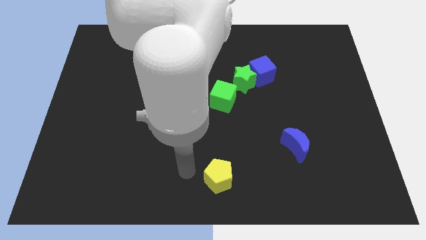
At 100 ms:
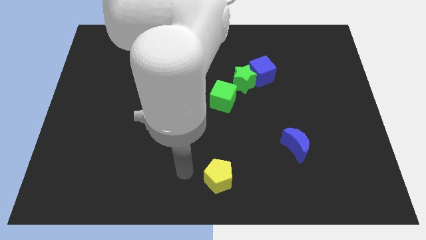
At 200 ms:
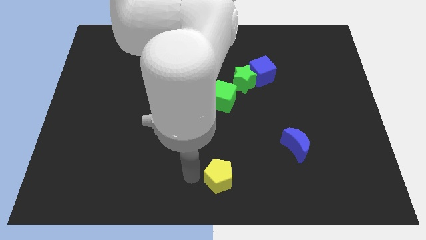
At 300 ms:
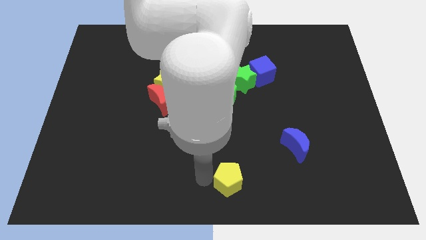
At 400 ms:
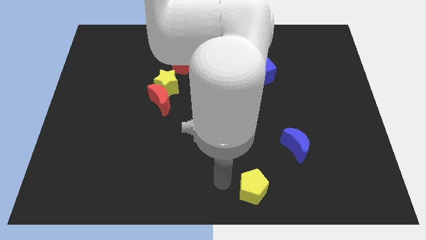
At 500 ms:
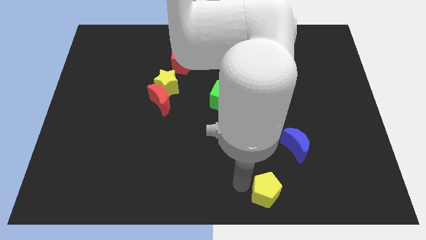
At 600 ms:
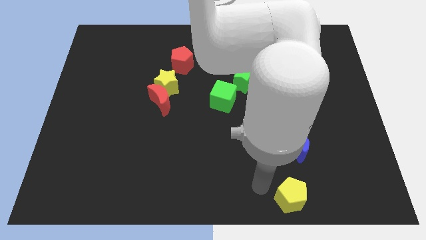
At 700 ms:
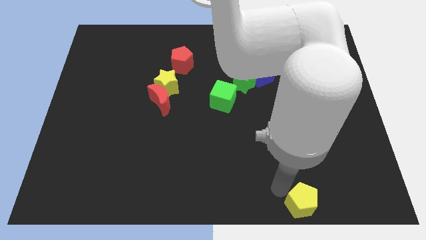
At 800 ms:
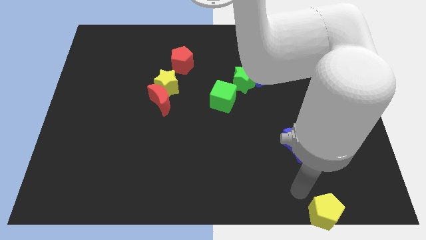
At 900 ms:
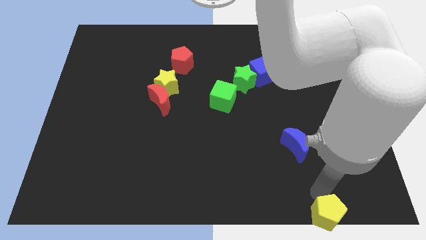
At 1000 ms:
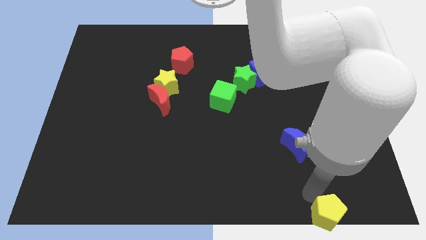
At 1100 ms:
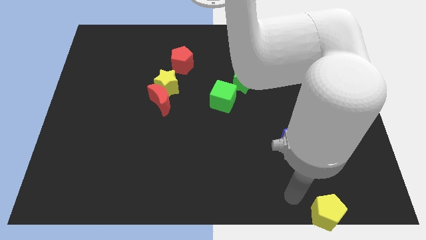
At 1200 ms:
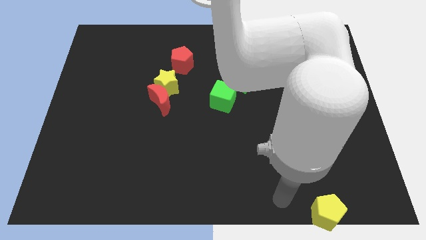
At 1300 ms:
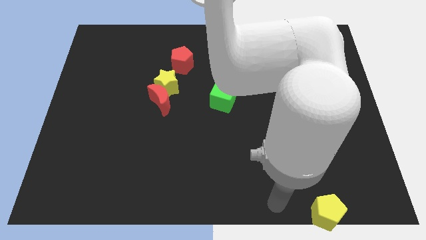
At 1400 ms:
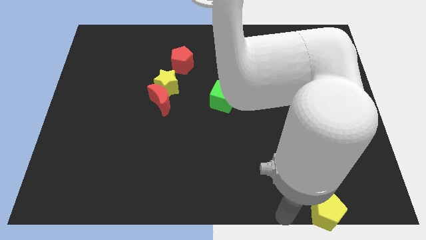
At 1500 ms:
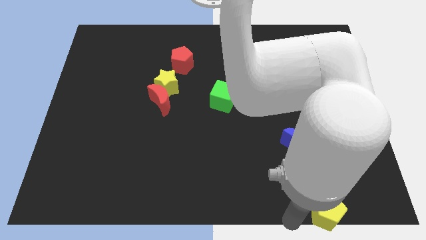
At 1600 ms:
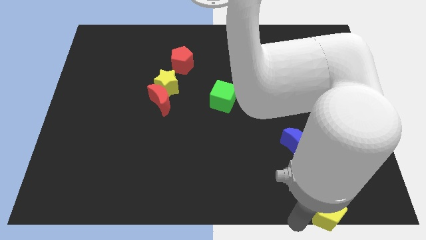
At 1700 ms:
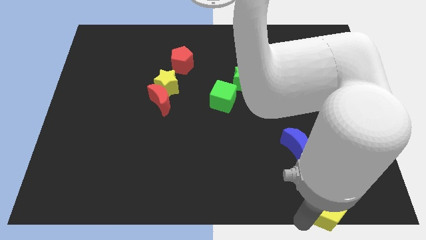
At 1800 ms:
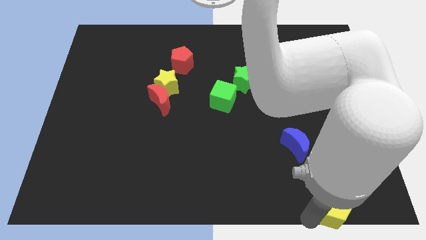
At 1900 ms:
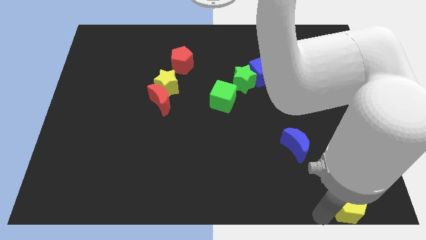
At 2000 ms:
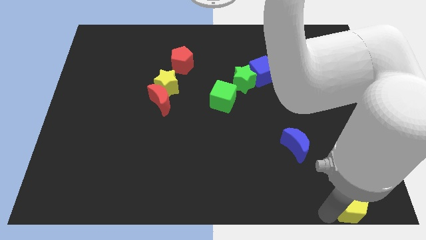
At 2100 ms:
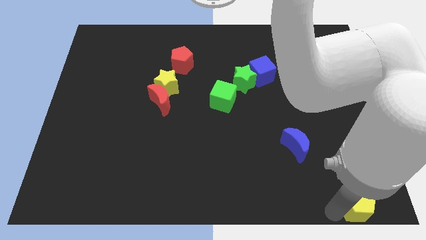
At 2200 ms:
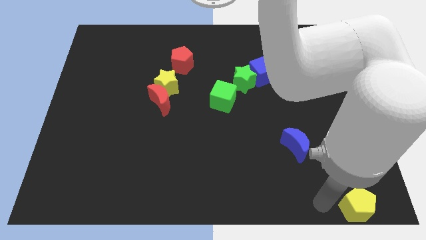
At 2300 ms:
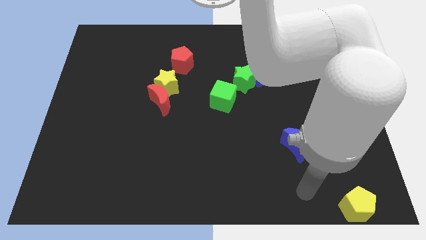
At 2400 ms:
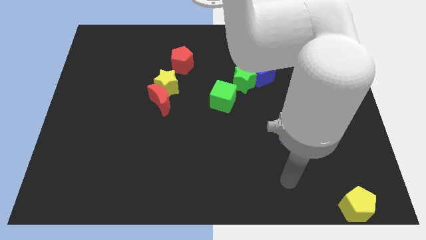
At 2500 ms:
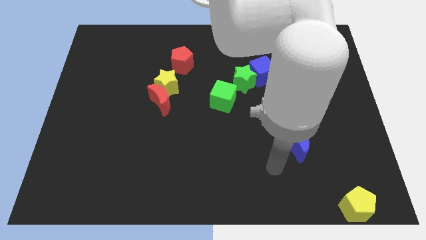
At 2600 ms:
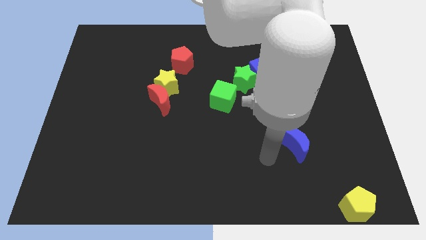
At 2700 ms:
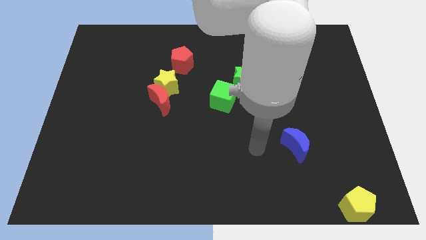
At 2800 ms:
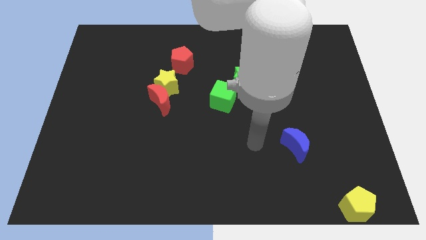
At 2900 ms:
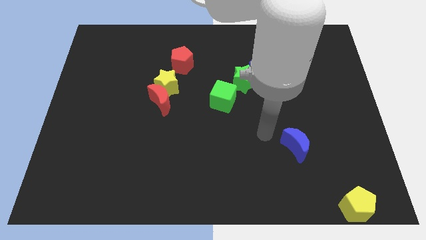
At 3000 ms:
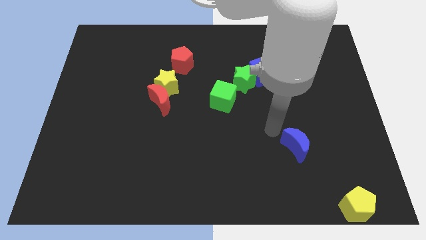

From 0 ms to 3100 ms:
move the yellow pentagon towards the bottom right corner

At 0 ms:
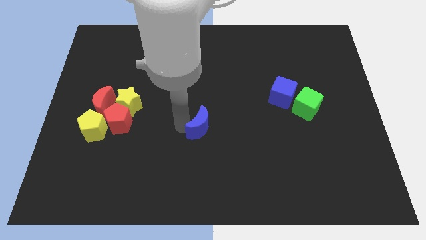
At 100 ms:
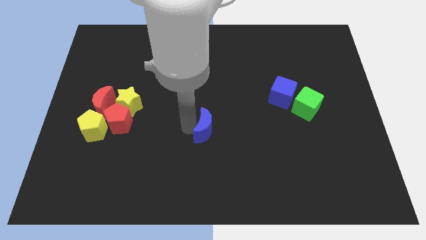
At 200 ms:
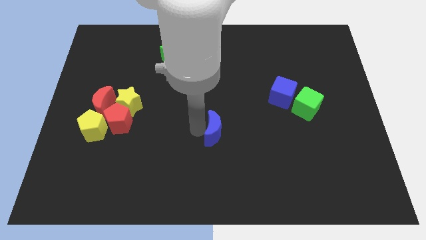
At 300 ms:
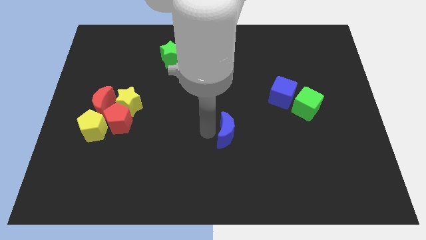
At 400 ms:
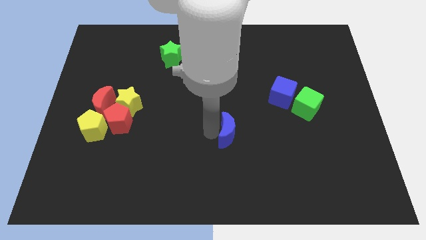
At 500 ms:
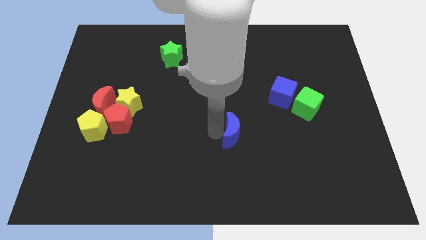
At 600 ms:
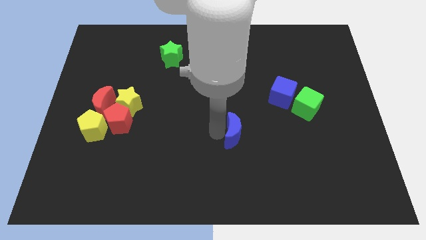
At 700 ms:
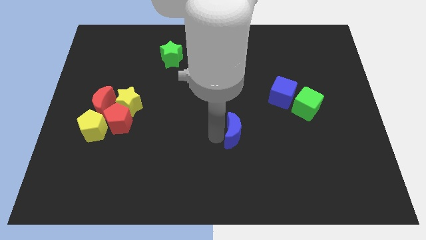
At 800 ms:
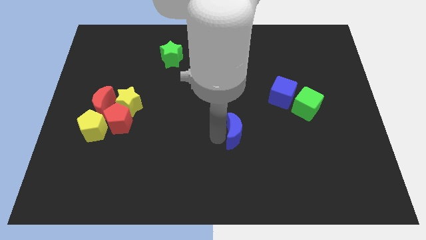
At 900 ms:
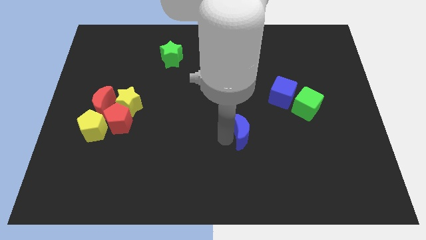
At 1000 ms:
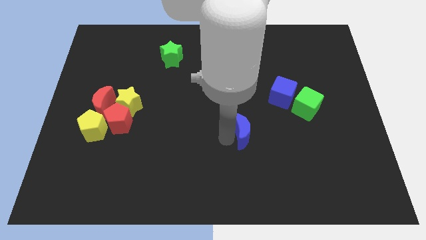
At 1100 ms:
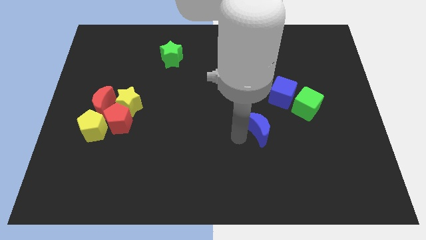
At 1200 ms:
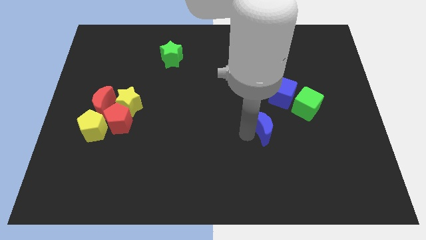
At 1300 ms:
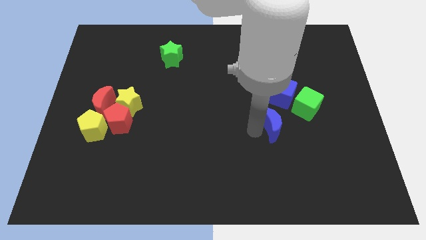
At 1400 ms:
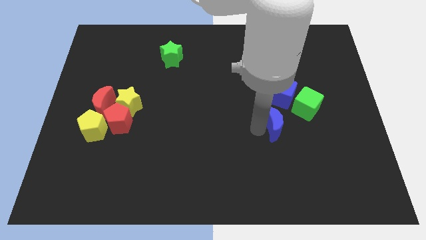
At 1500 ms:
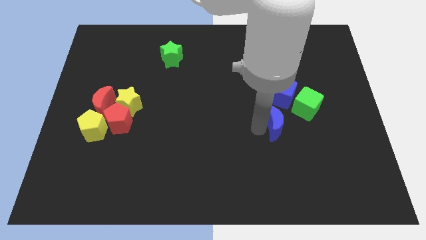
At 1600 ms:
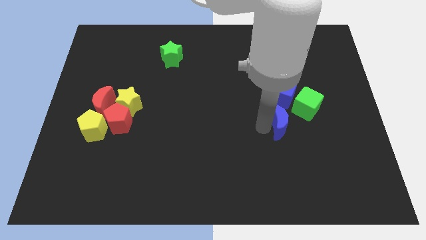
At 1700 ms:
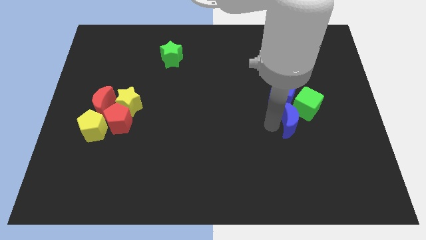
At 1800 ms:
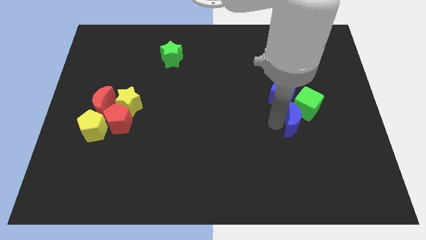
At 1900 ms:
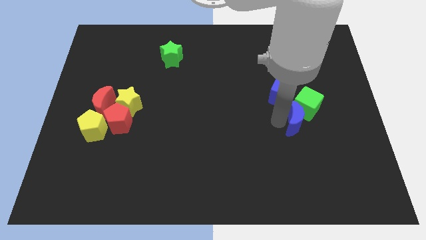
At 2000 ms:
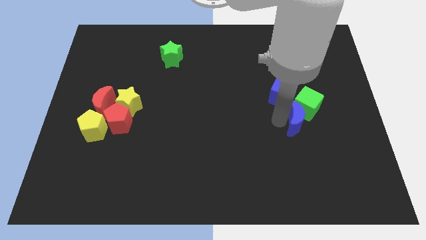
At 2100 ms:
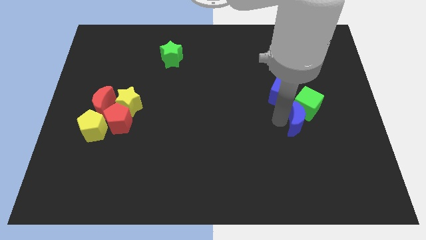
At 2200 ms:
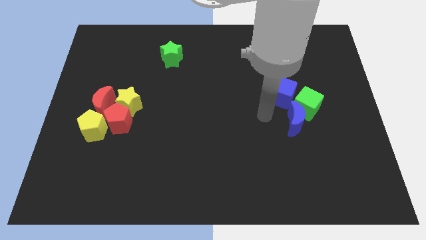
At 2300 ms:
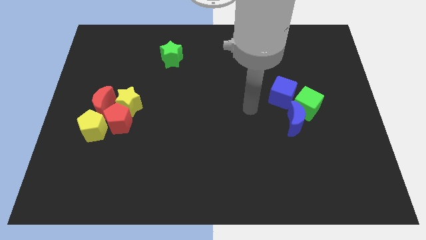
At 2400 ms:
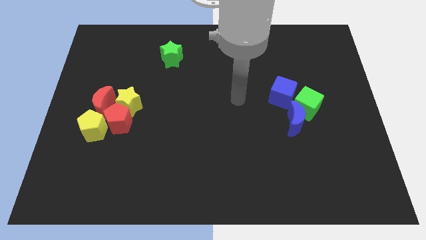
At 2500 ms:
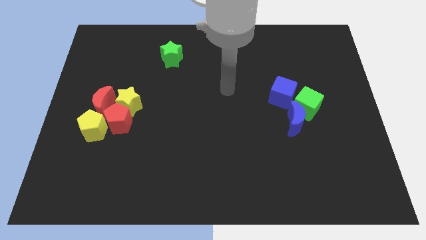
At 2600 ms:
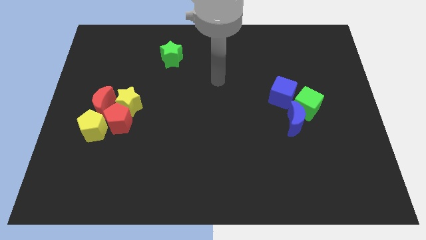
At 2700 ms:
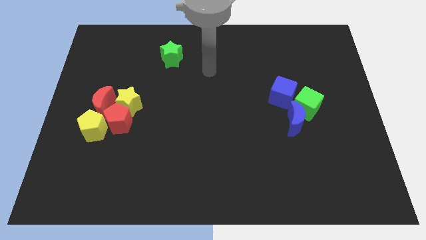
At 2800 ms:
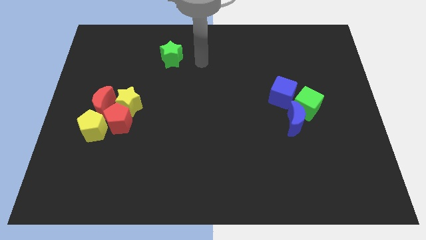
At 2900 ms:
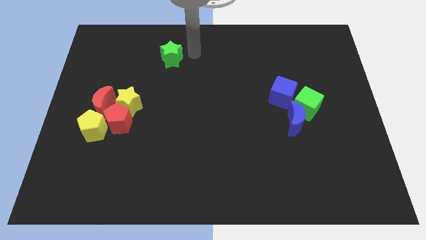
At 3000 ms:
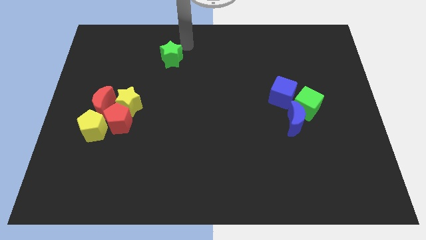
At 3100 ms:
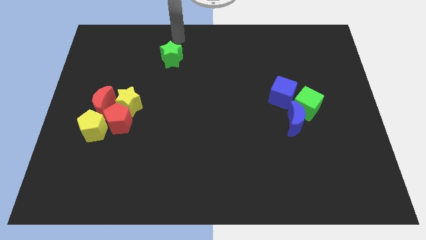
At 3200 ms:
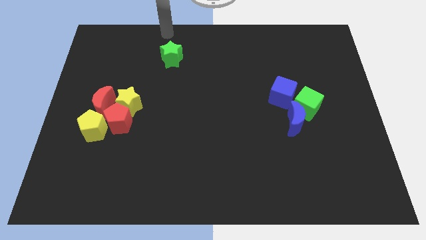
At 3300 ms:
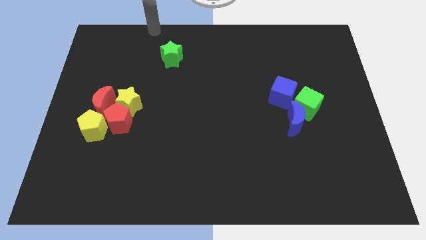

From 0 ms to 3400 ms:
push the blue moon to the bottom side of the green cube

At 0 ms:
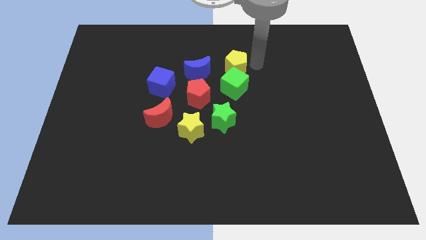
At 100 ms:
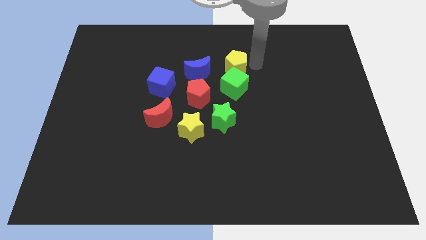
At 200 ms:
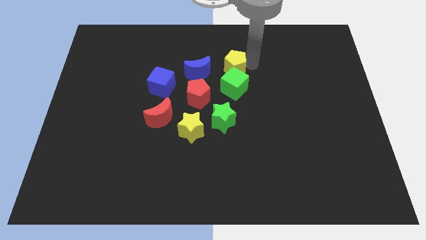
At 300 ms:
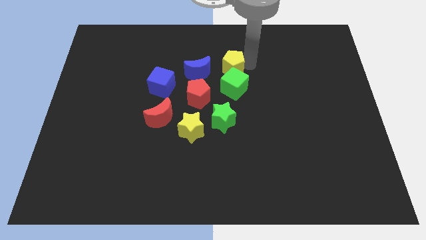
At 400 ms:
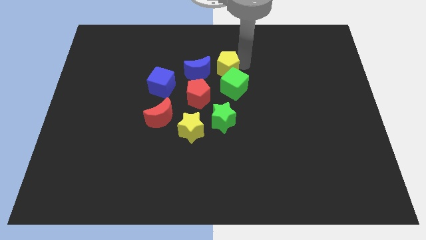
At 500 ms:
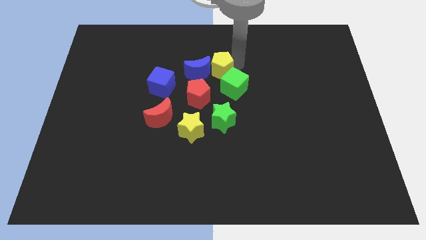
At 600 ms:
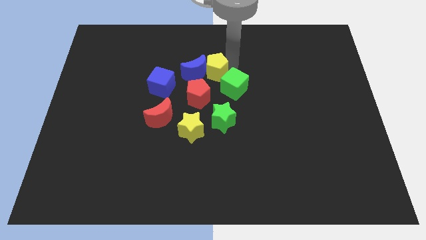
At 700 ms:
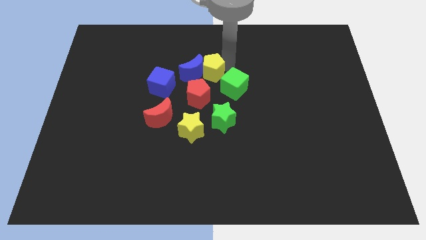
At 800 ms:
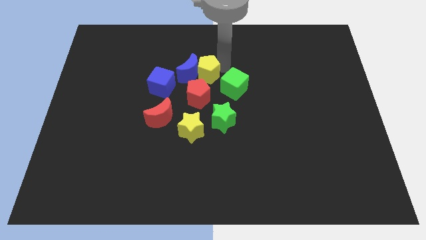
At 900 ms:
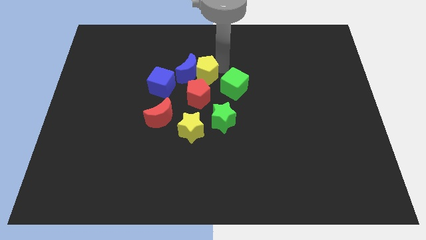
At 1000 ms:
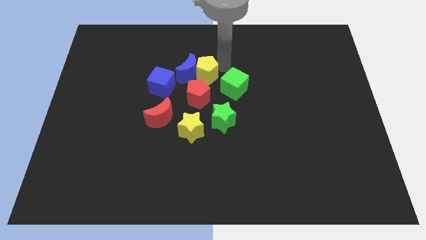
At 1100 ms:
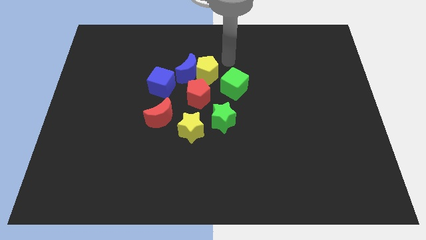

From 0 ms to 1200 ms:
move the yellow pentagon into the blue moon

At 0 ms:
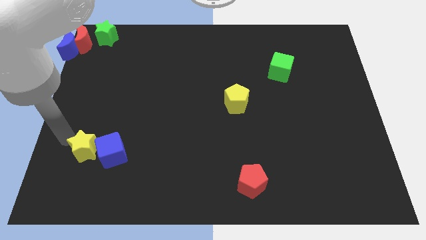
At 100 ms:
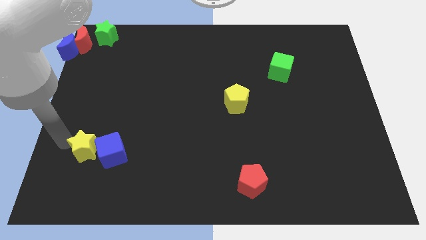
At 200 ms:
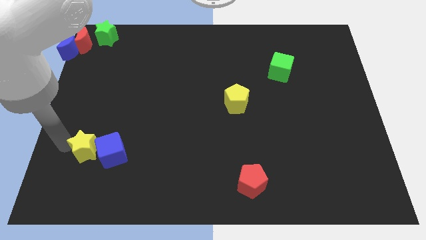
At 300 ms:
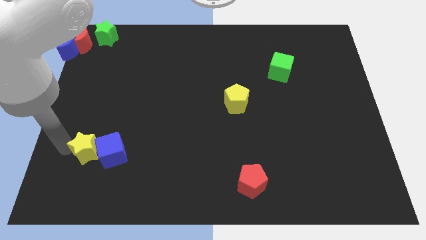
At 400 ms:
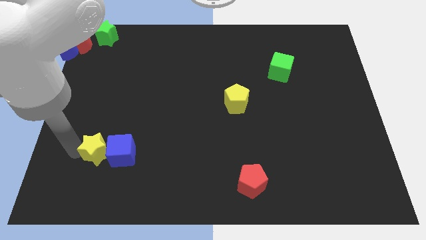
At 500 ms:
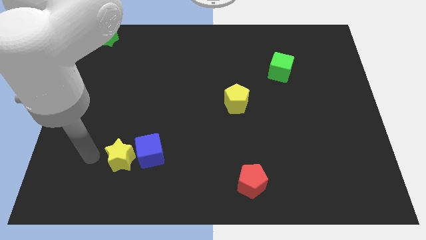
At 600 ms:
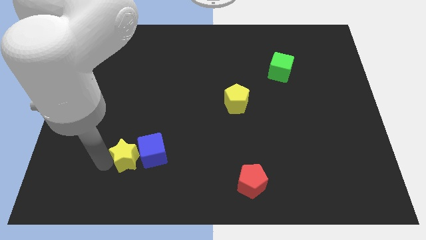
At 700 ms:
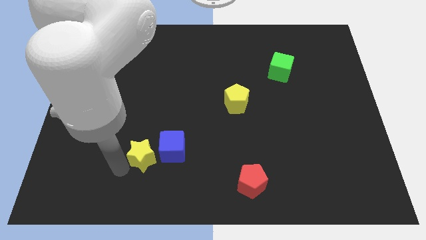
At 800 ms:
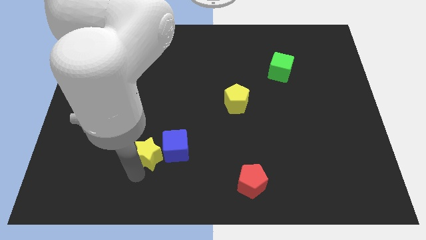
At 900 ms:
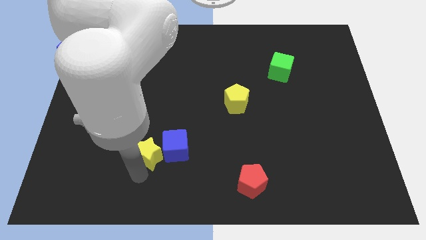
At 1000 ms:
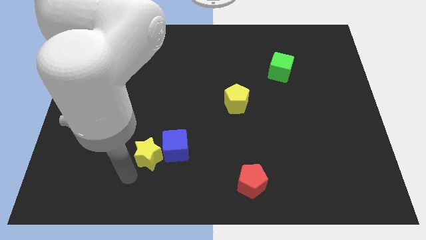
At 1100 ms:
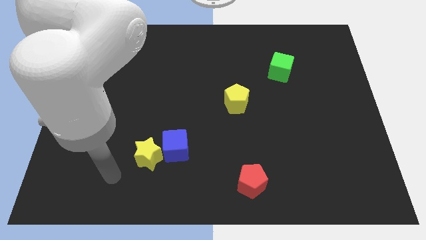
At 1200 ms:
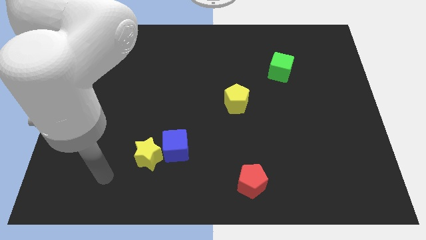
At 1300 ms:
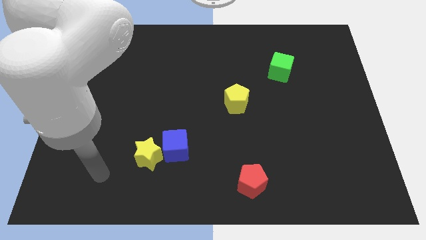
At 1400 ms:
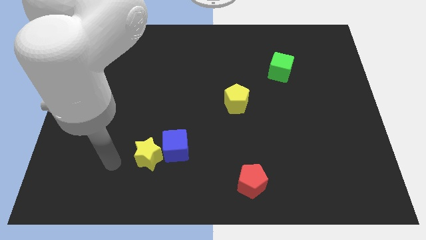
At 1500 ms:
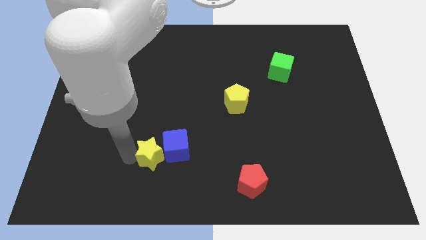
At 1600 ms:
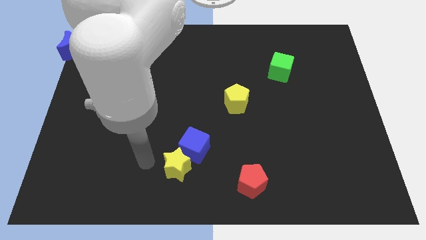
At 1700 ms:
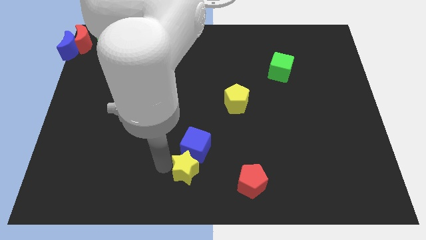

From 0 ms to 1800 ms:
drag the yellow star and blue cube towards the red pentagon
